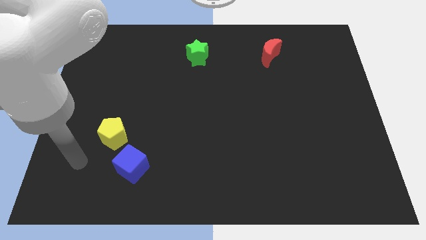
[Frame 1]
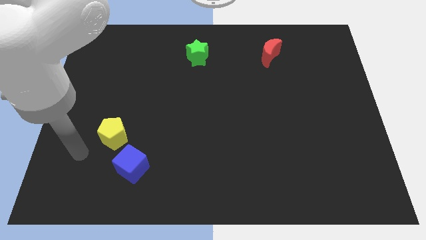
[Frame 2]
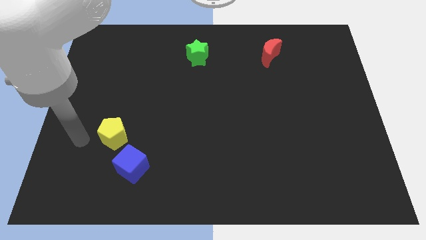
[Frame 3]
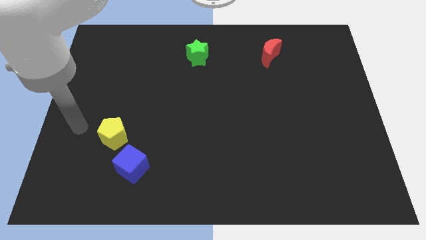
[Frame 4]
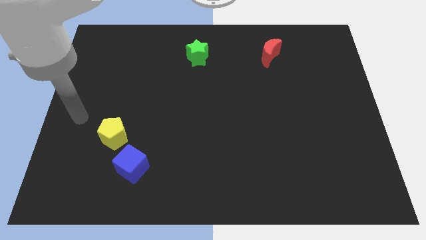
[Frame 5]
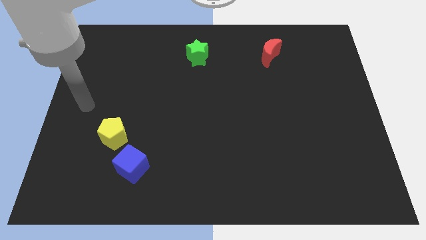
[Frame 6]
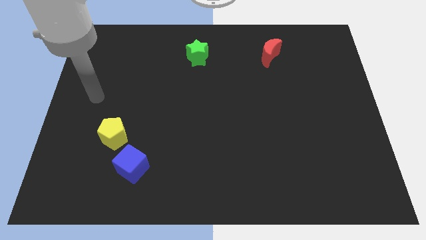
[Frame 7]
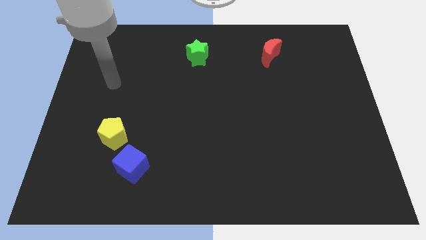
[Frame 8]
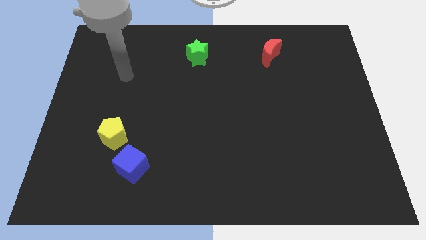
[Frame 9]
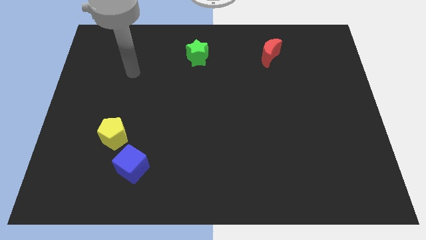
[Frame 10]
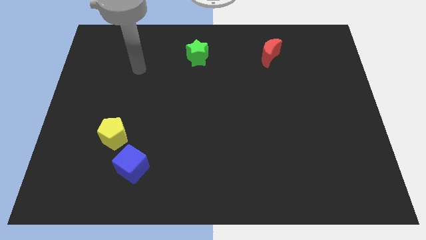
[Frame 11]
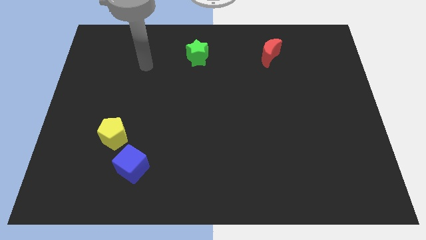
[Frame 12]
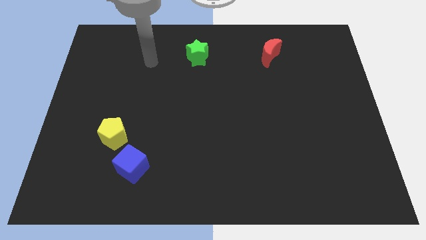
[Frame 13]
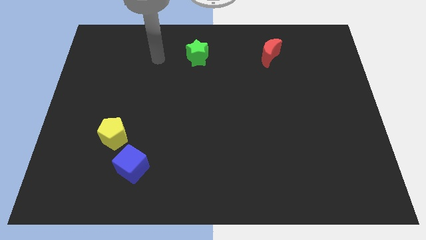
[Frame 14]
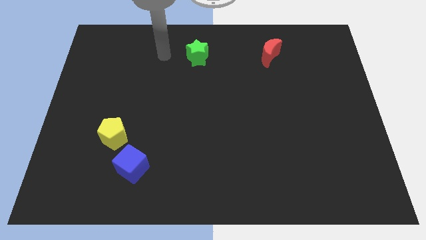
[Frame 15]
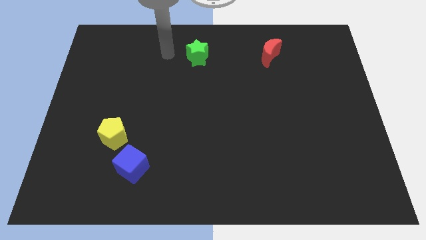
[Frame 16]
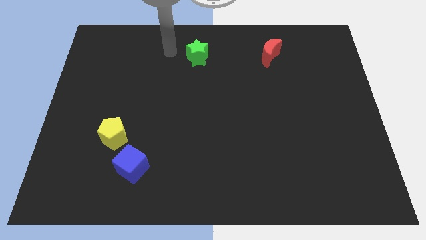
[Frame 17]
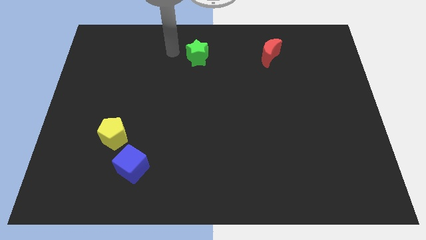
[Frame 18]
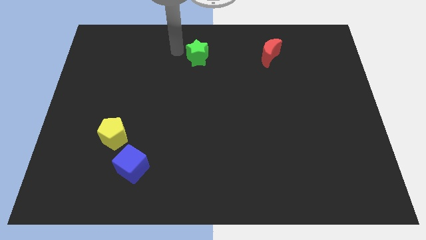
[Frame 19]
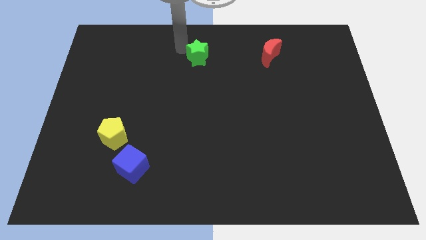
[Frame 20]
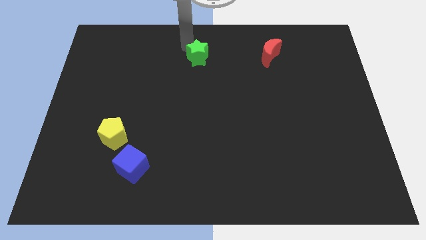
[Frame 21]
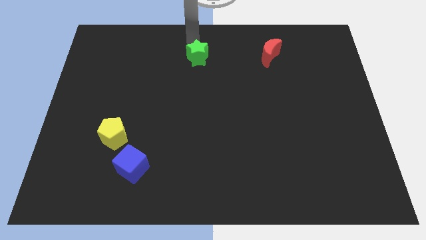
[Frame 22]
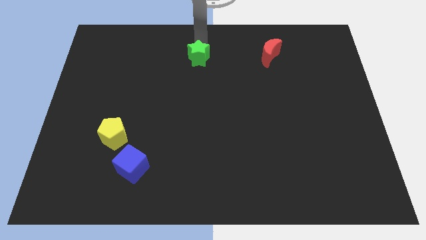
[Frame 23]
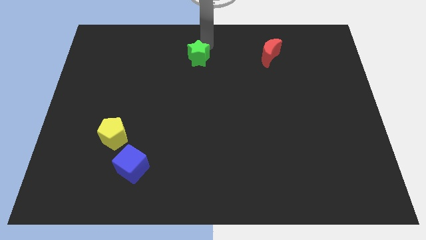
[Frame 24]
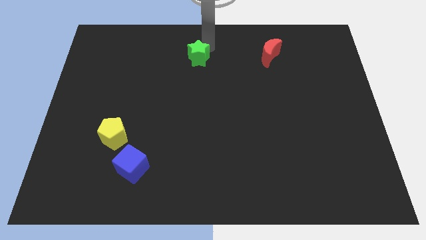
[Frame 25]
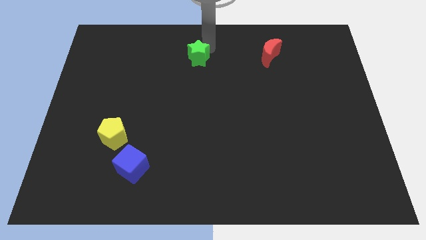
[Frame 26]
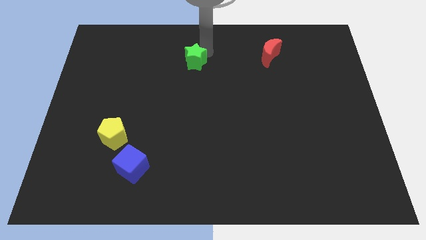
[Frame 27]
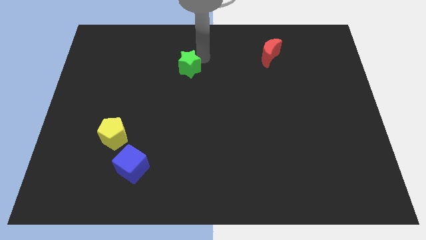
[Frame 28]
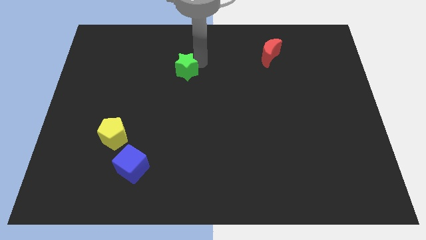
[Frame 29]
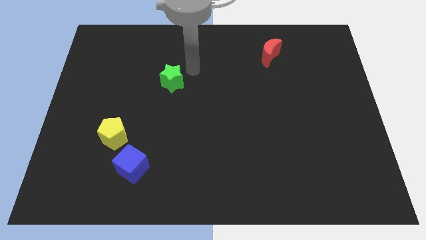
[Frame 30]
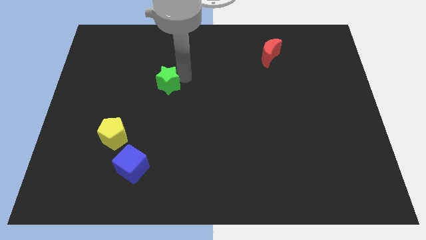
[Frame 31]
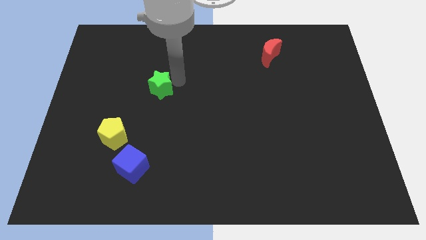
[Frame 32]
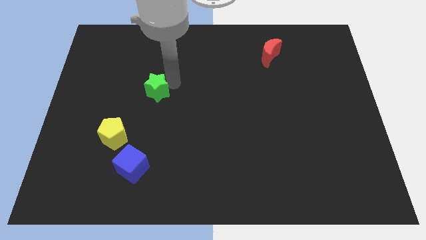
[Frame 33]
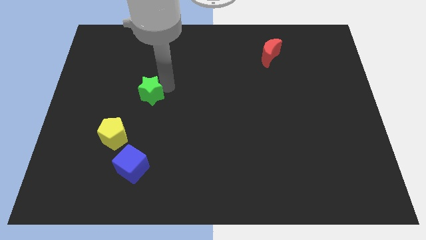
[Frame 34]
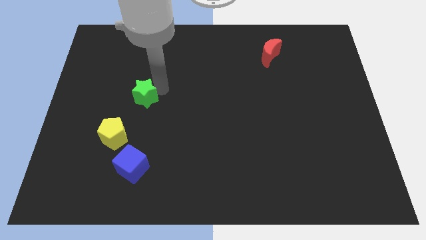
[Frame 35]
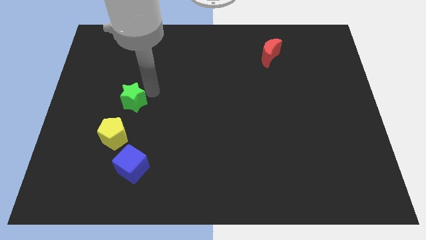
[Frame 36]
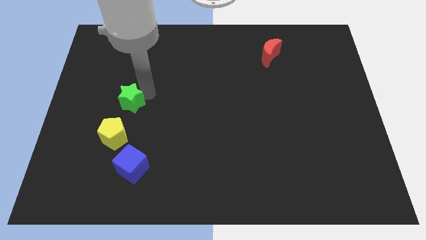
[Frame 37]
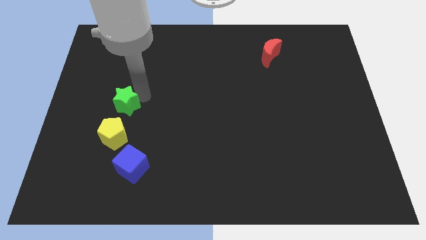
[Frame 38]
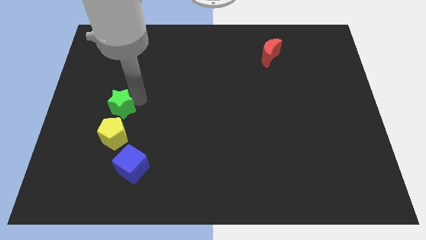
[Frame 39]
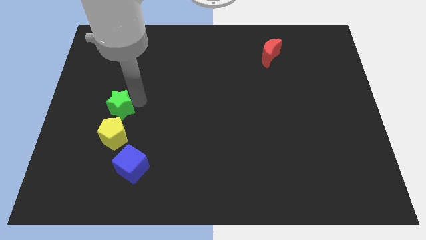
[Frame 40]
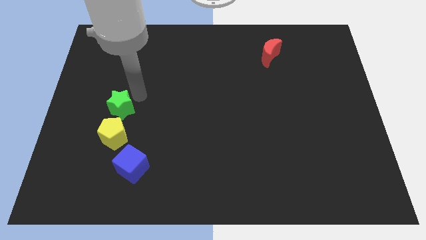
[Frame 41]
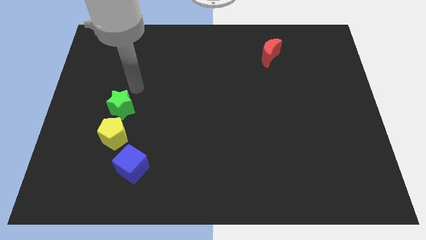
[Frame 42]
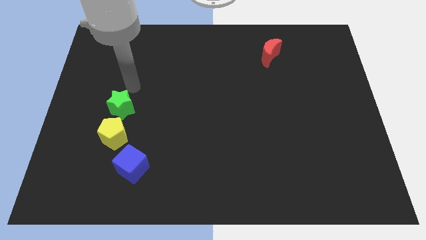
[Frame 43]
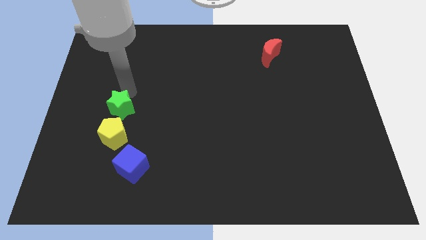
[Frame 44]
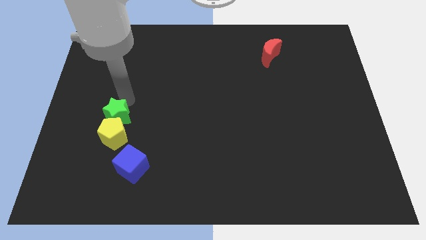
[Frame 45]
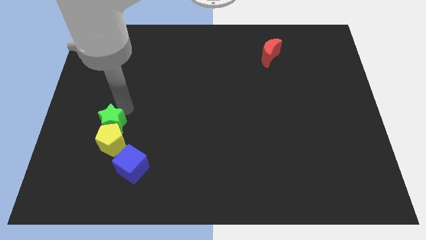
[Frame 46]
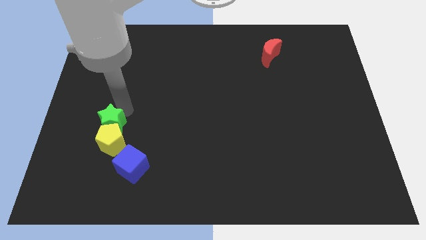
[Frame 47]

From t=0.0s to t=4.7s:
move the green star to the yellow pentagon

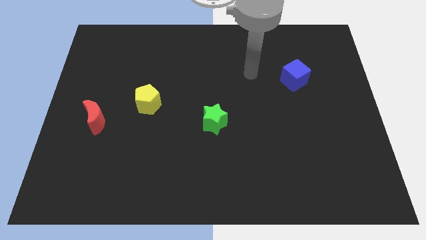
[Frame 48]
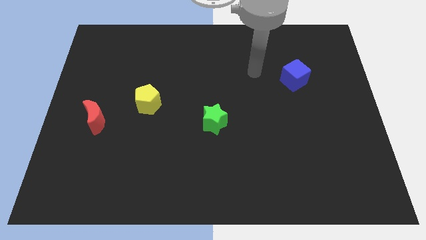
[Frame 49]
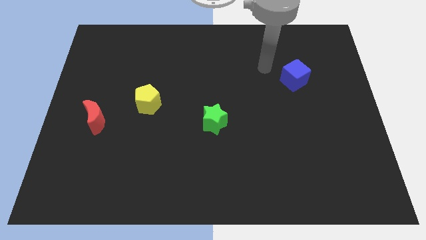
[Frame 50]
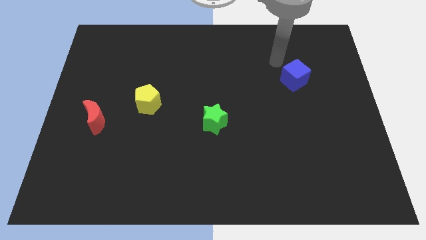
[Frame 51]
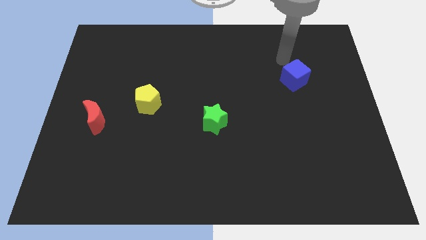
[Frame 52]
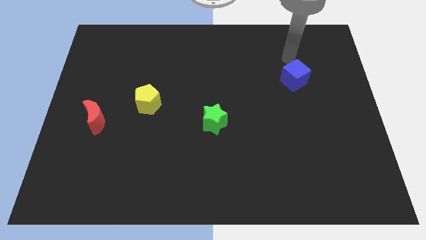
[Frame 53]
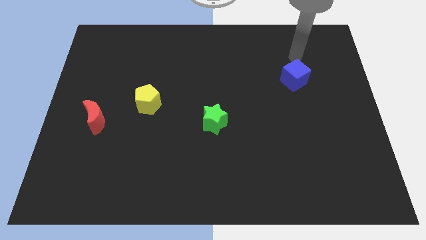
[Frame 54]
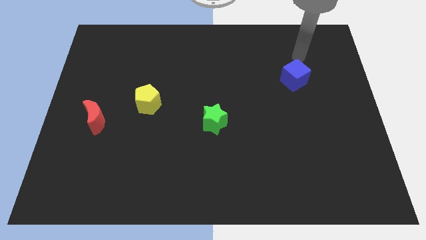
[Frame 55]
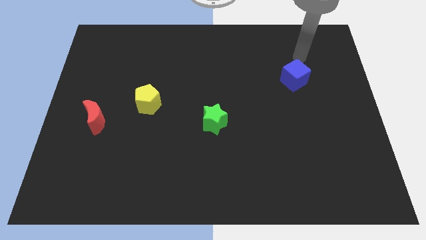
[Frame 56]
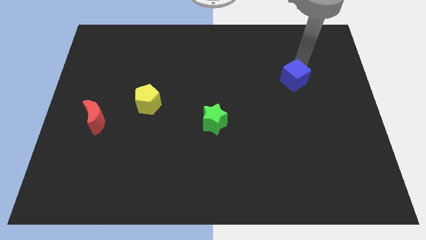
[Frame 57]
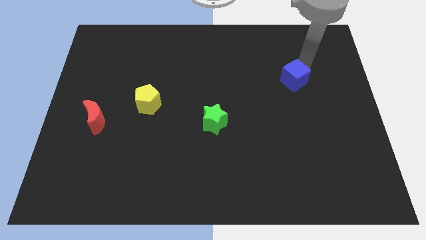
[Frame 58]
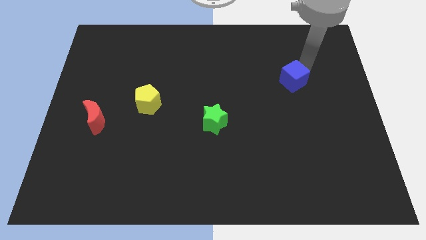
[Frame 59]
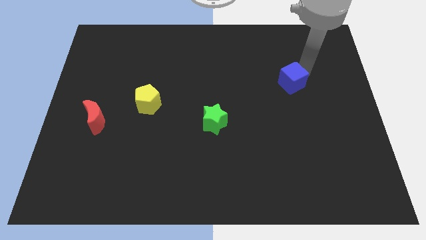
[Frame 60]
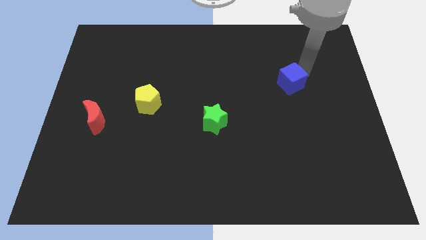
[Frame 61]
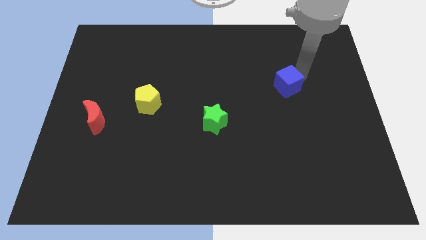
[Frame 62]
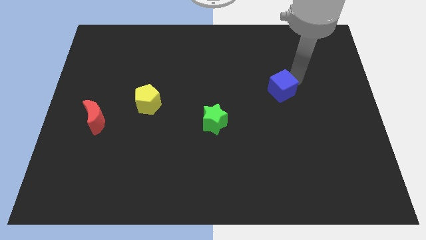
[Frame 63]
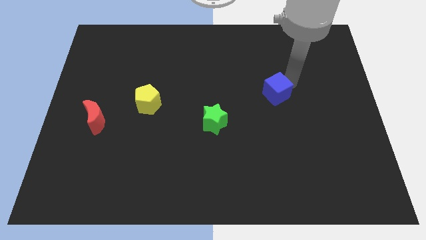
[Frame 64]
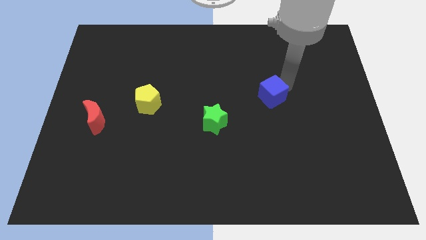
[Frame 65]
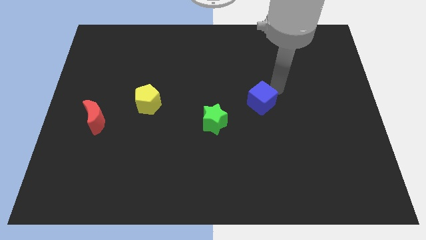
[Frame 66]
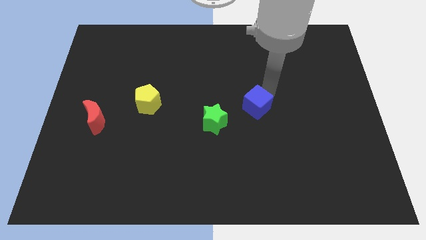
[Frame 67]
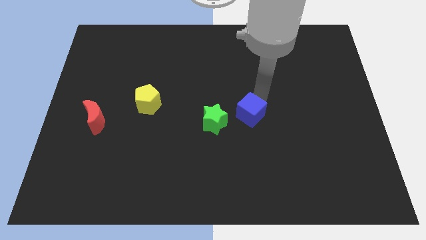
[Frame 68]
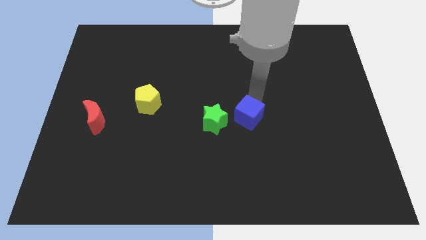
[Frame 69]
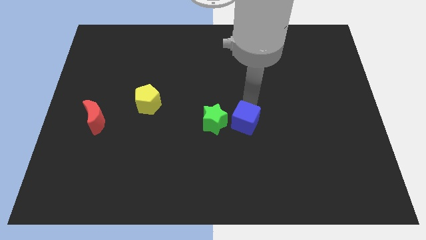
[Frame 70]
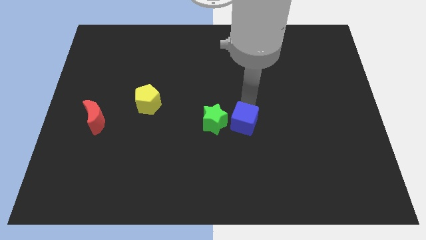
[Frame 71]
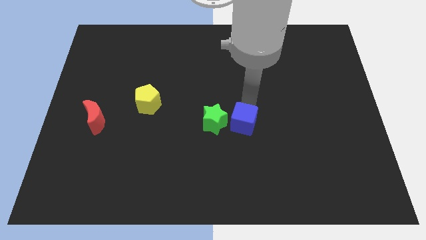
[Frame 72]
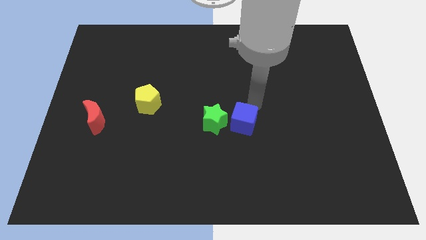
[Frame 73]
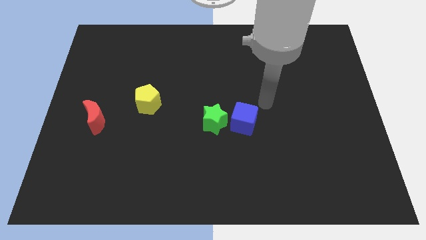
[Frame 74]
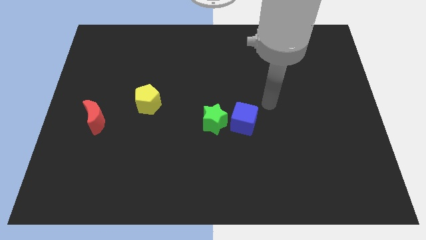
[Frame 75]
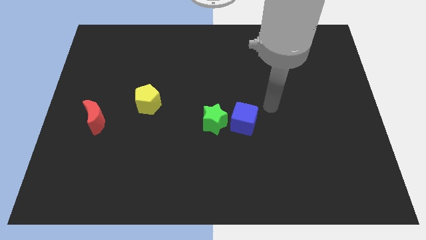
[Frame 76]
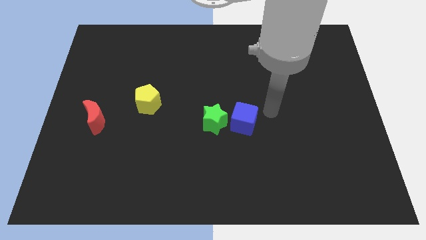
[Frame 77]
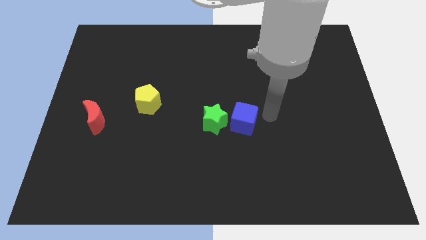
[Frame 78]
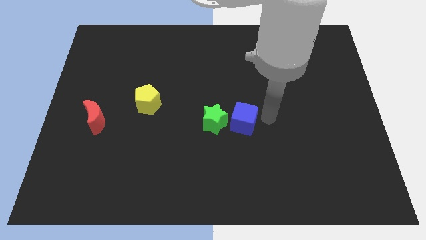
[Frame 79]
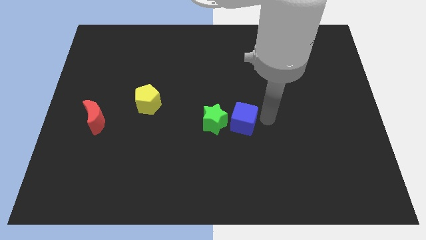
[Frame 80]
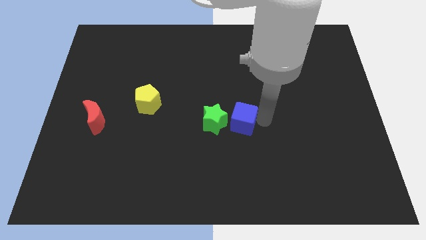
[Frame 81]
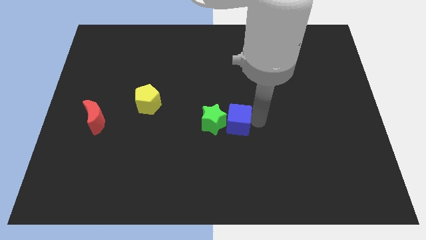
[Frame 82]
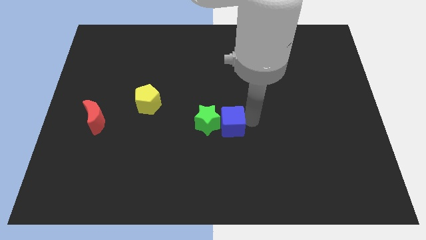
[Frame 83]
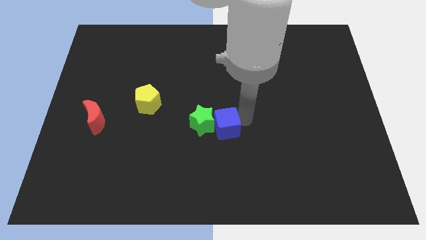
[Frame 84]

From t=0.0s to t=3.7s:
put the blue cube close to the green star
